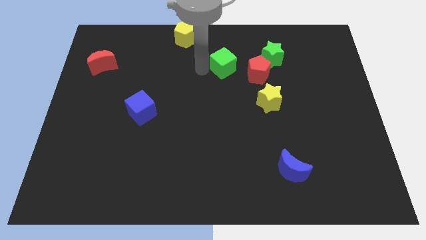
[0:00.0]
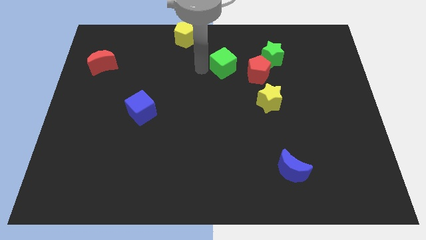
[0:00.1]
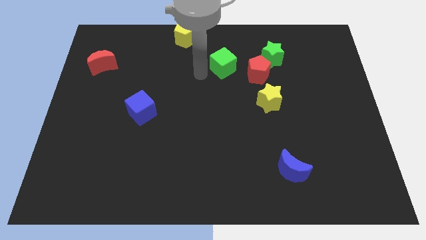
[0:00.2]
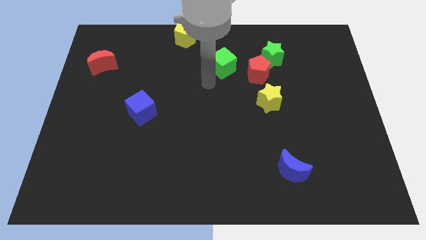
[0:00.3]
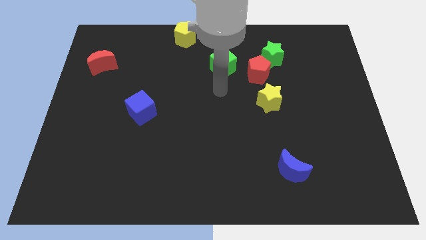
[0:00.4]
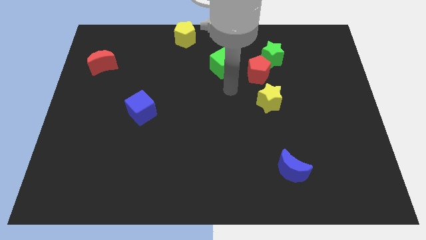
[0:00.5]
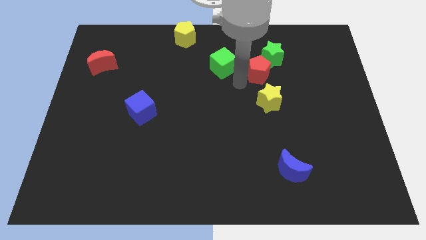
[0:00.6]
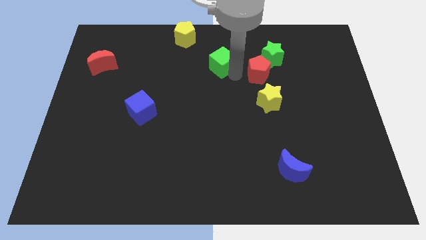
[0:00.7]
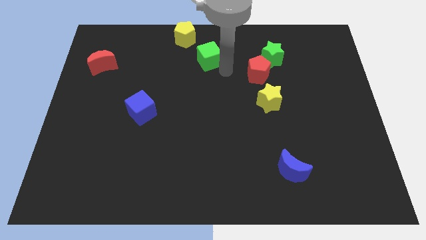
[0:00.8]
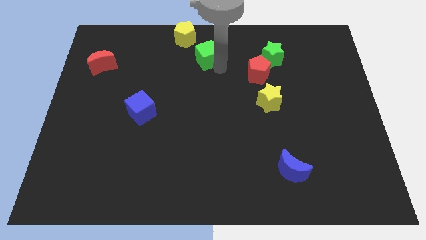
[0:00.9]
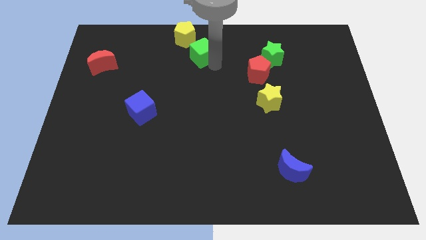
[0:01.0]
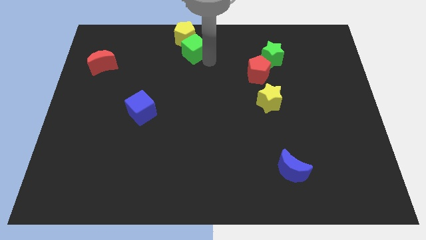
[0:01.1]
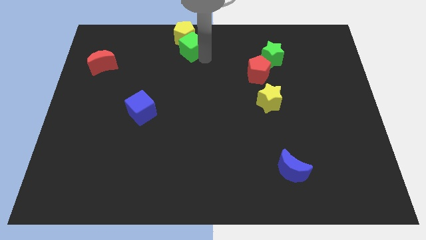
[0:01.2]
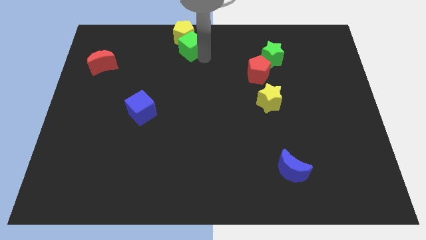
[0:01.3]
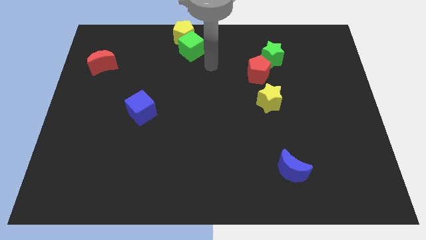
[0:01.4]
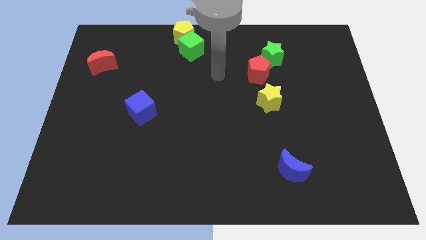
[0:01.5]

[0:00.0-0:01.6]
push the green cube into yellow pentagon

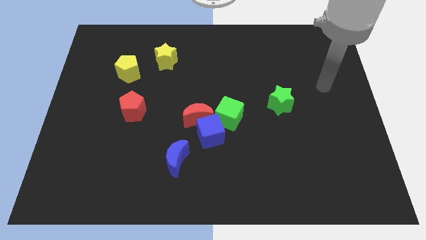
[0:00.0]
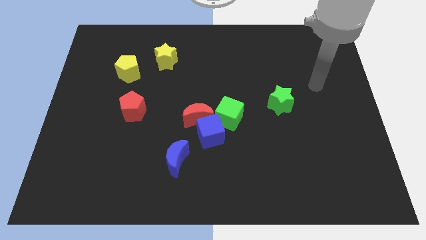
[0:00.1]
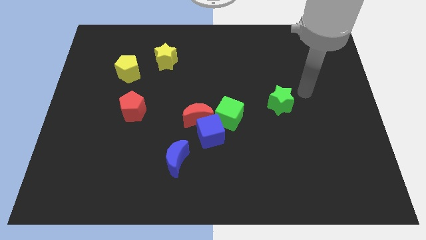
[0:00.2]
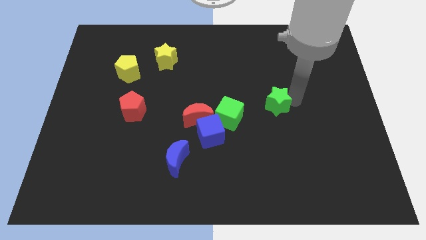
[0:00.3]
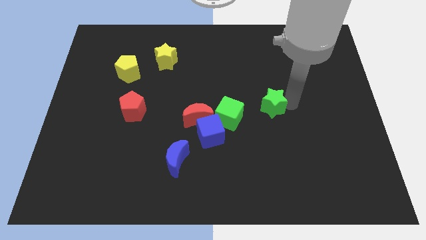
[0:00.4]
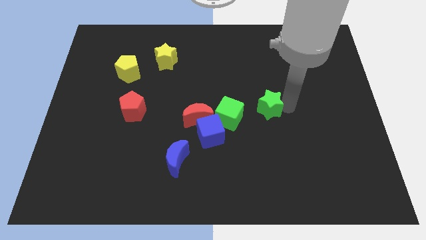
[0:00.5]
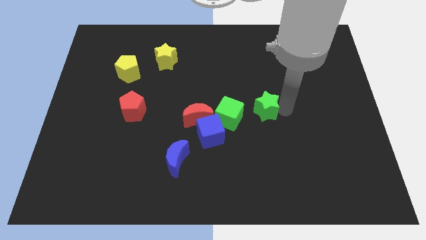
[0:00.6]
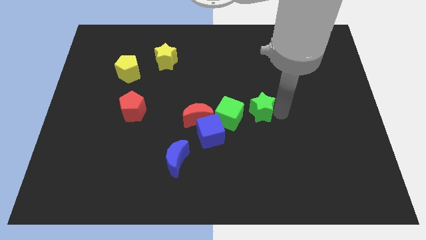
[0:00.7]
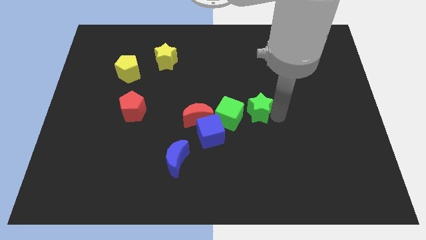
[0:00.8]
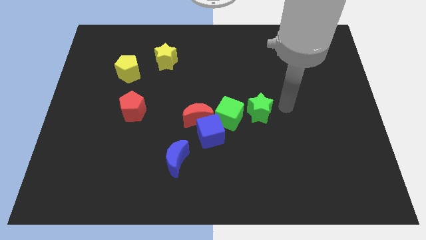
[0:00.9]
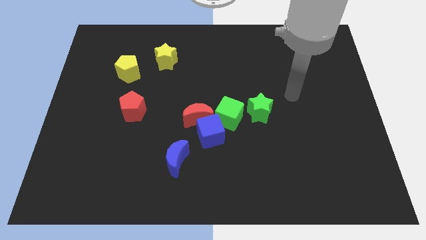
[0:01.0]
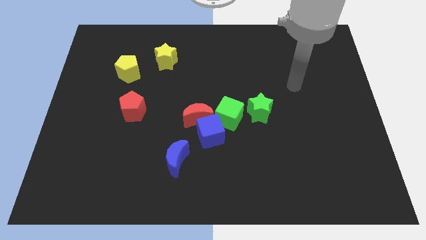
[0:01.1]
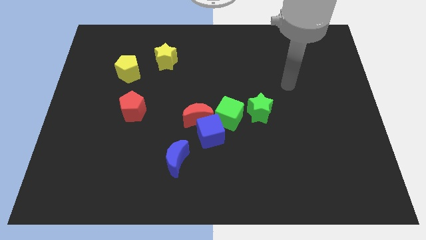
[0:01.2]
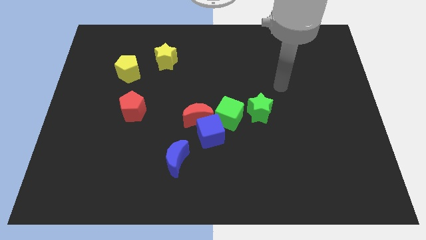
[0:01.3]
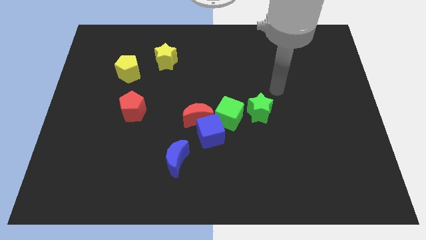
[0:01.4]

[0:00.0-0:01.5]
place green star to the right side of the green cube

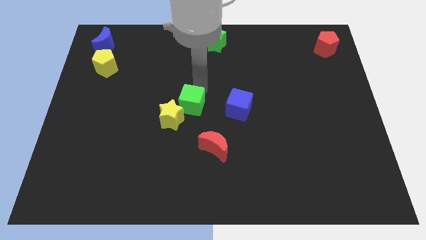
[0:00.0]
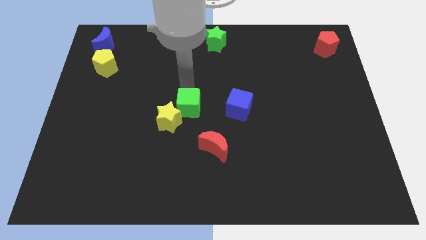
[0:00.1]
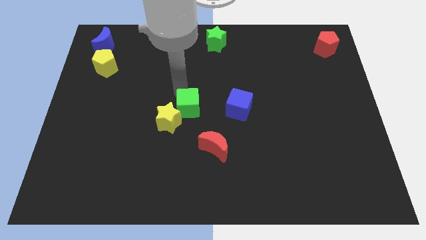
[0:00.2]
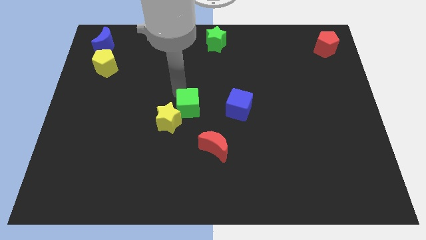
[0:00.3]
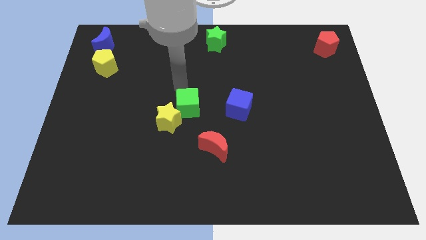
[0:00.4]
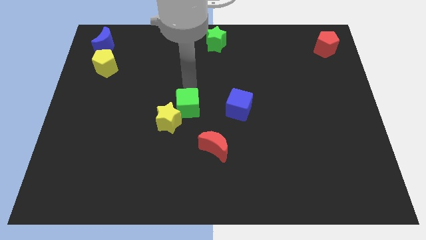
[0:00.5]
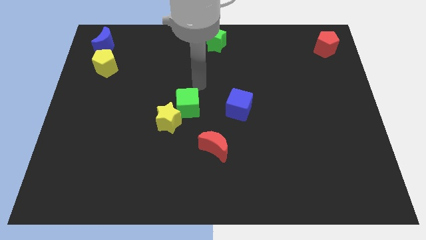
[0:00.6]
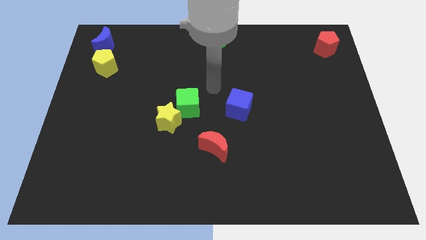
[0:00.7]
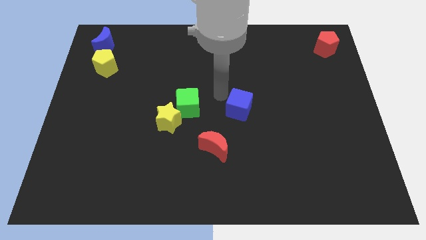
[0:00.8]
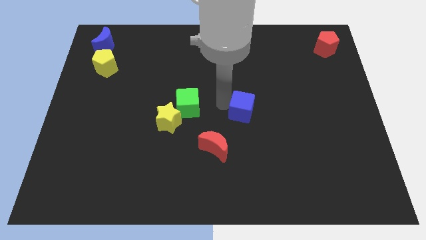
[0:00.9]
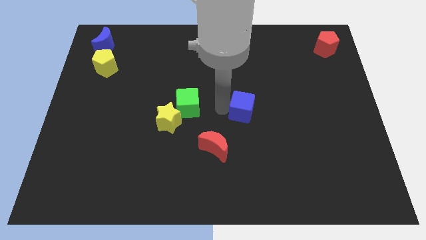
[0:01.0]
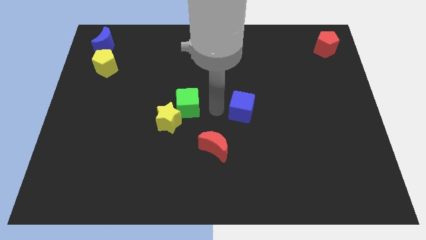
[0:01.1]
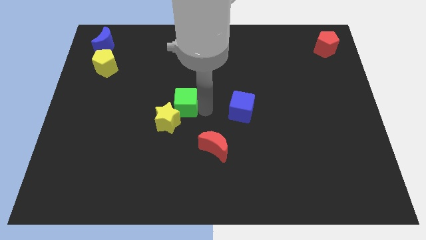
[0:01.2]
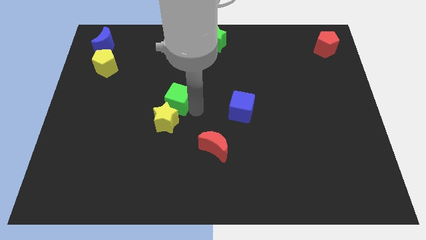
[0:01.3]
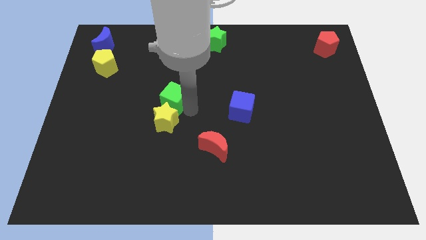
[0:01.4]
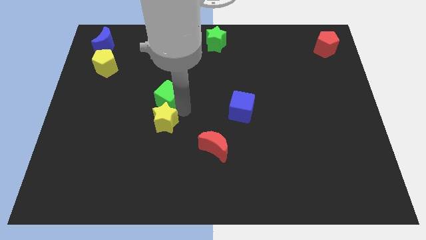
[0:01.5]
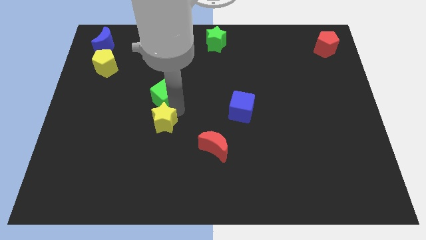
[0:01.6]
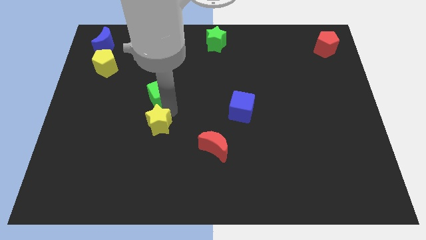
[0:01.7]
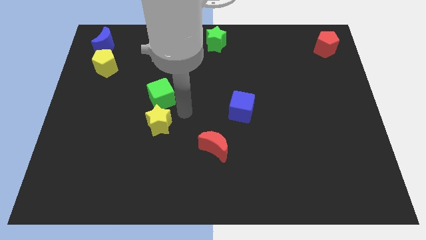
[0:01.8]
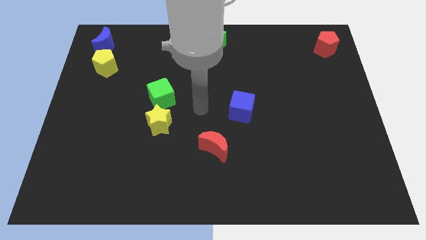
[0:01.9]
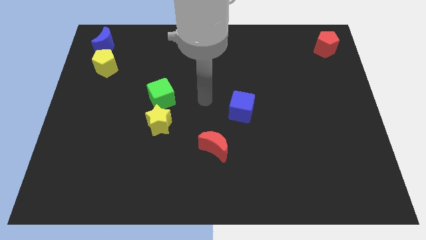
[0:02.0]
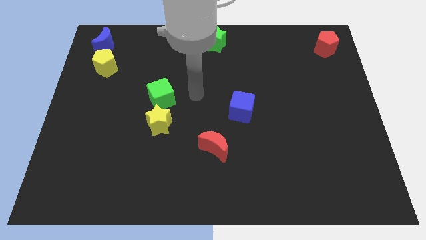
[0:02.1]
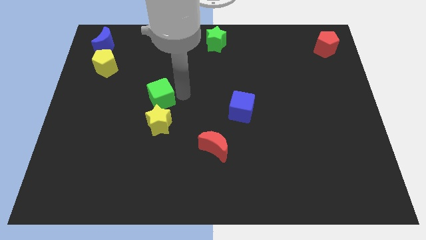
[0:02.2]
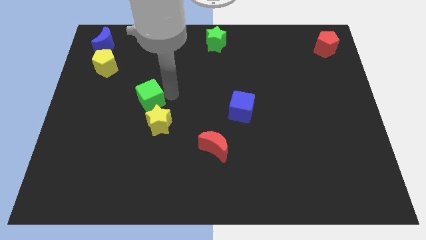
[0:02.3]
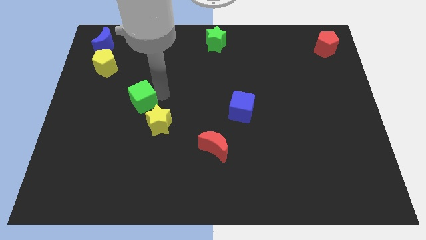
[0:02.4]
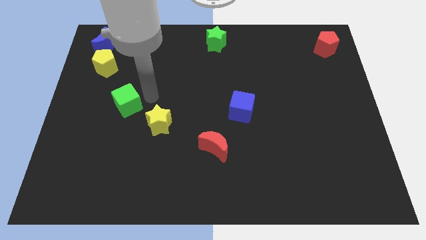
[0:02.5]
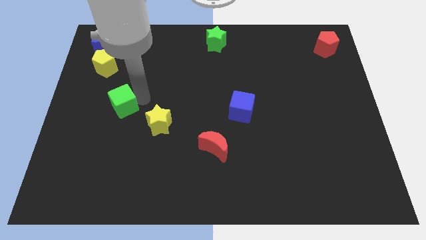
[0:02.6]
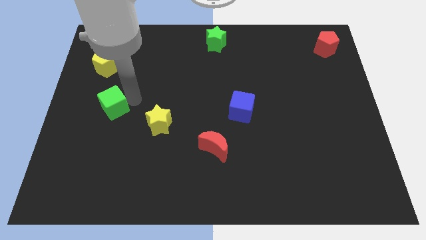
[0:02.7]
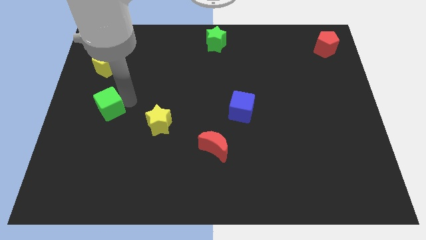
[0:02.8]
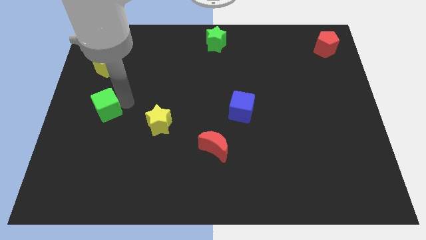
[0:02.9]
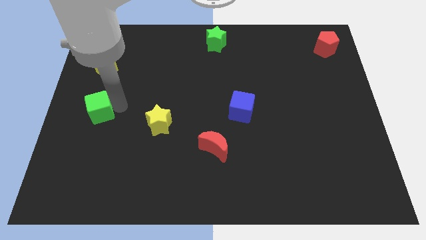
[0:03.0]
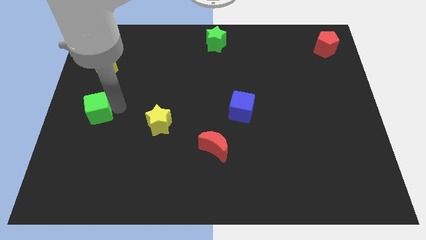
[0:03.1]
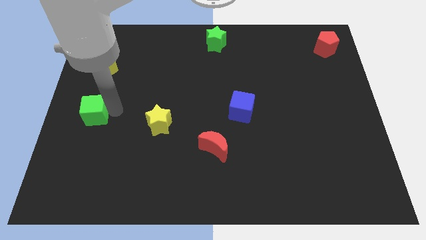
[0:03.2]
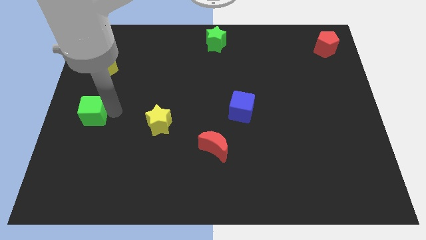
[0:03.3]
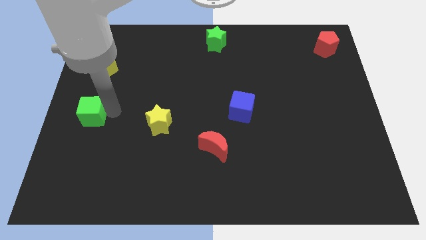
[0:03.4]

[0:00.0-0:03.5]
separate green cube from yellow star

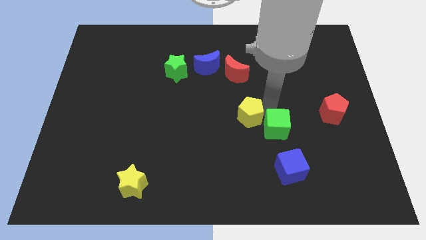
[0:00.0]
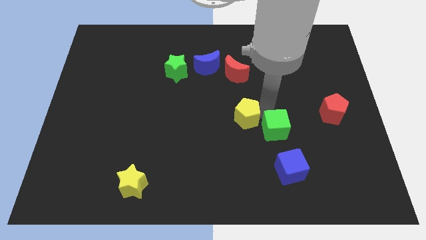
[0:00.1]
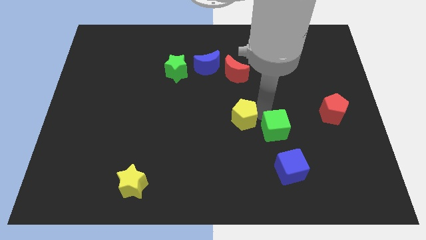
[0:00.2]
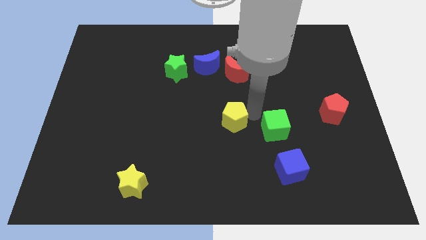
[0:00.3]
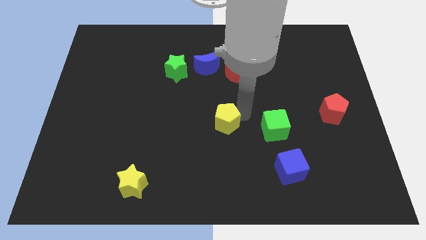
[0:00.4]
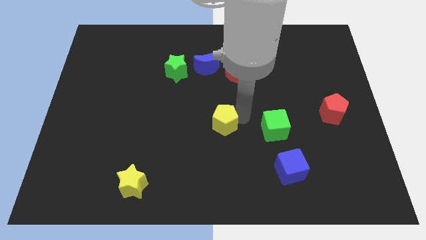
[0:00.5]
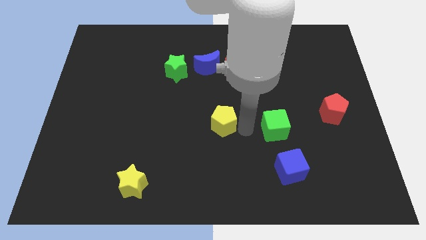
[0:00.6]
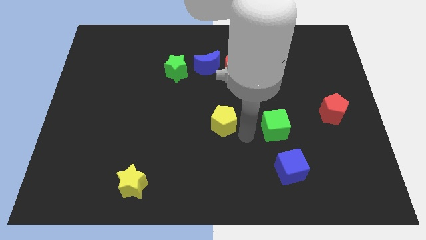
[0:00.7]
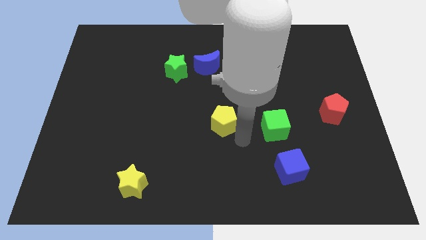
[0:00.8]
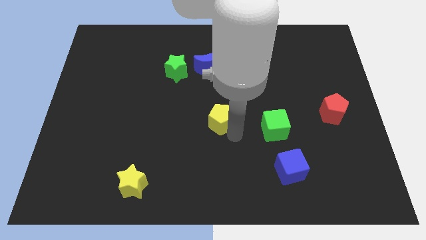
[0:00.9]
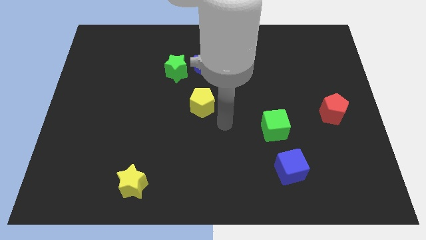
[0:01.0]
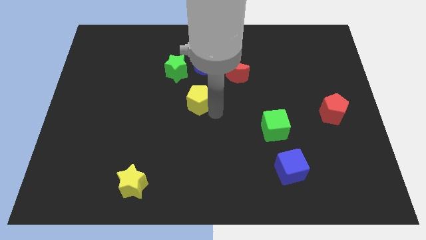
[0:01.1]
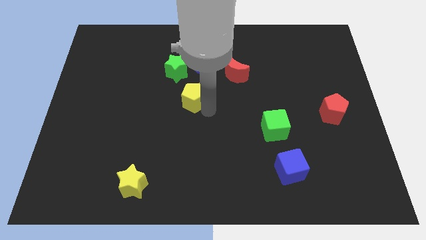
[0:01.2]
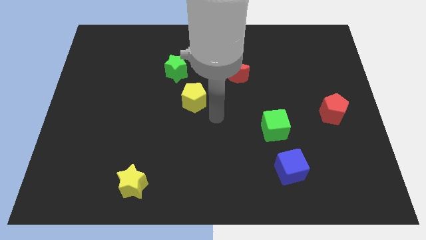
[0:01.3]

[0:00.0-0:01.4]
slide the yellow pentagon to the center of the board

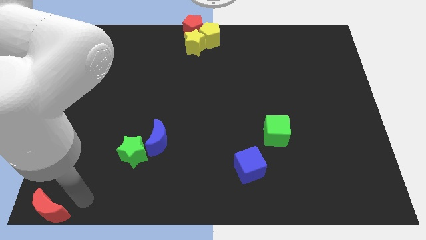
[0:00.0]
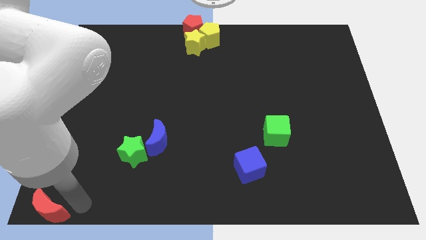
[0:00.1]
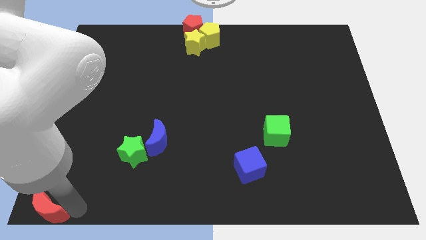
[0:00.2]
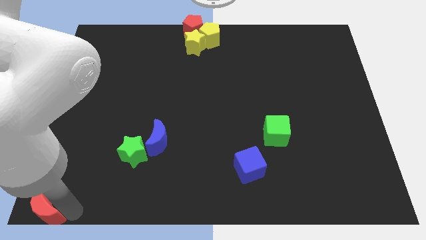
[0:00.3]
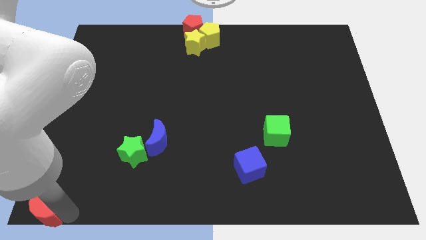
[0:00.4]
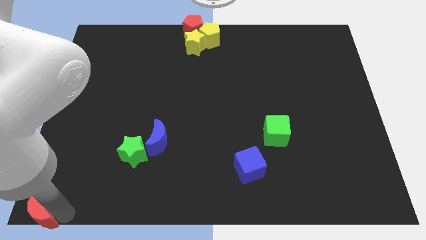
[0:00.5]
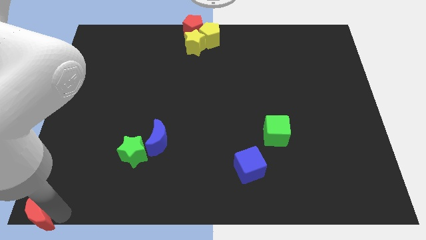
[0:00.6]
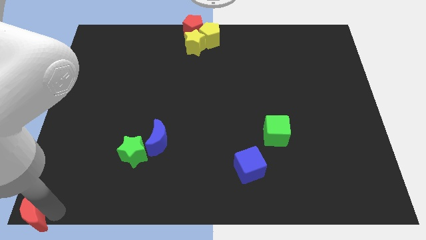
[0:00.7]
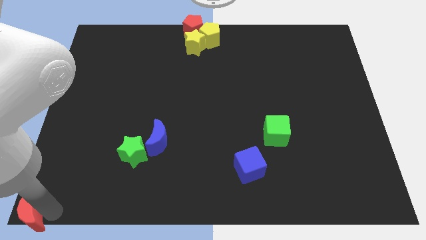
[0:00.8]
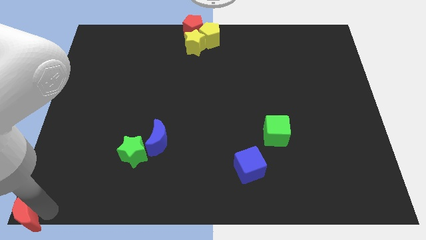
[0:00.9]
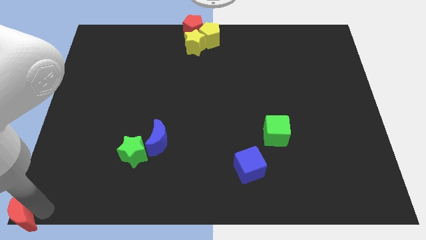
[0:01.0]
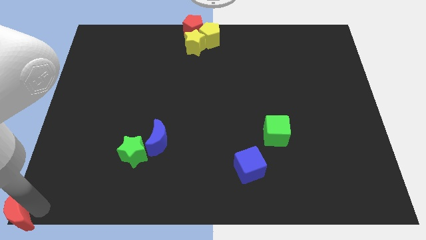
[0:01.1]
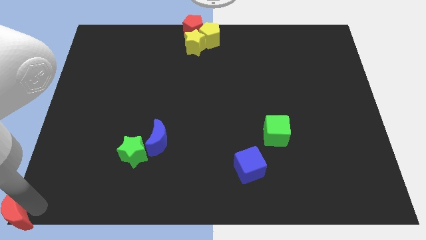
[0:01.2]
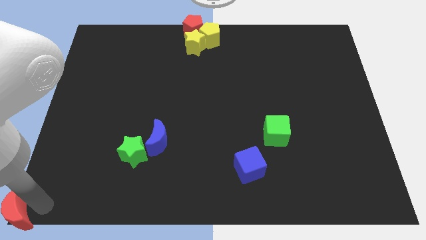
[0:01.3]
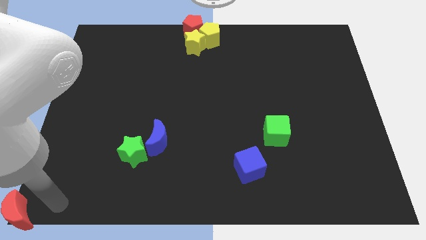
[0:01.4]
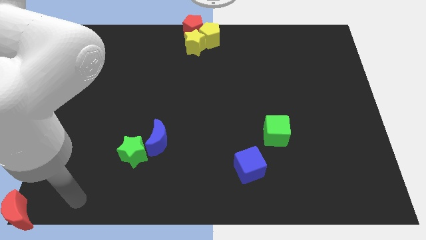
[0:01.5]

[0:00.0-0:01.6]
move red moon to the bottom left corner of the board
